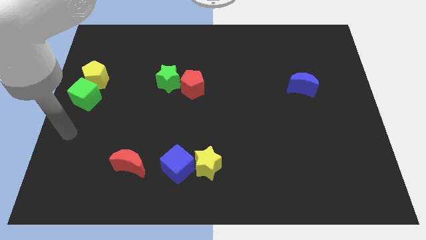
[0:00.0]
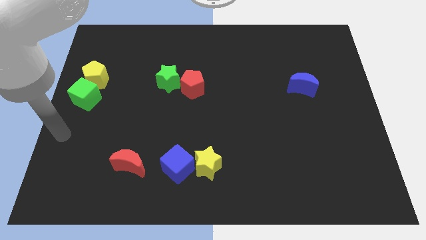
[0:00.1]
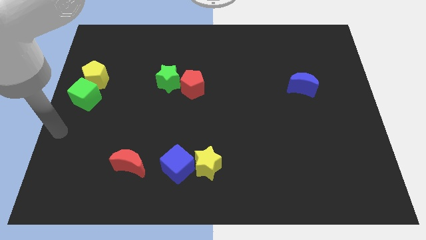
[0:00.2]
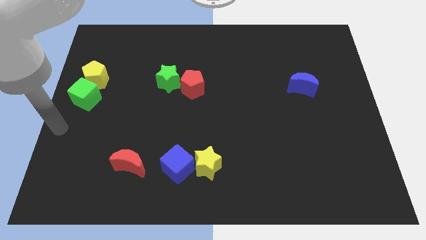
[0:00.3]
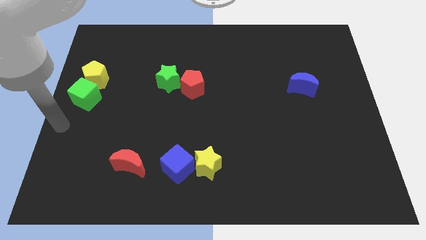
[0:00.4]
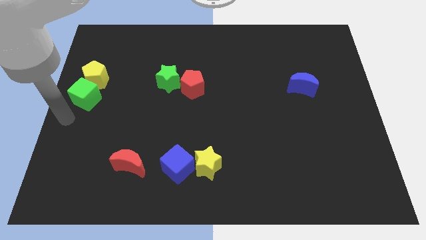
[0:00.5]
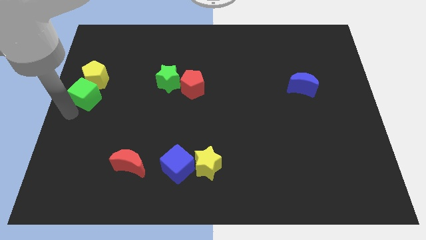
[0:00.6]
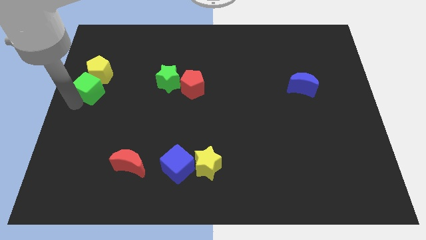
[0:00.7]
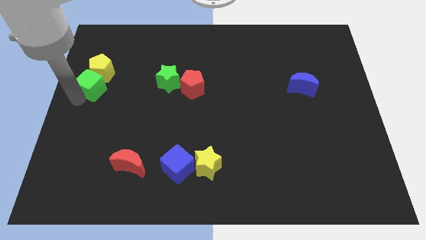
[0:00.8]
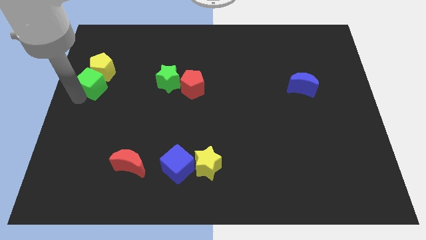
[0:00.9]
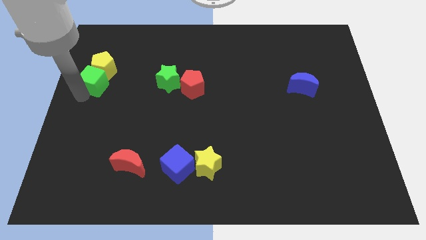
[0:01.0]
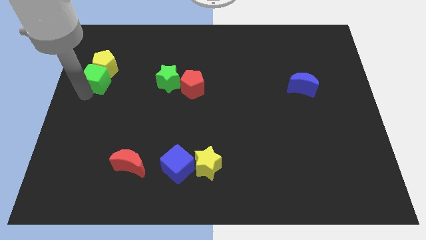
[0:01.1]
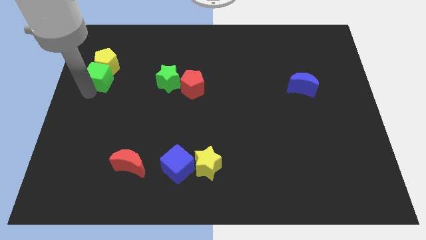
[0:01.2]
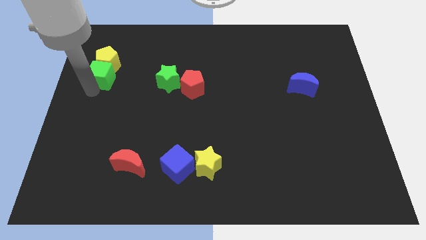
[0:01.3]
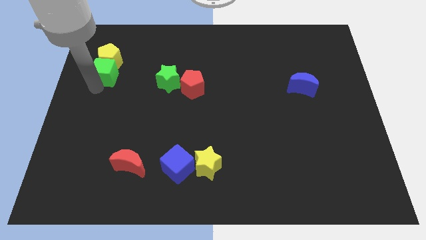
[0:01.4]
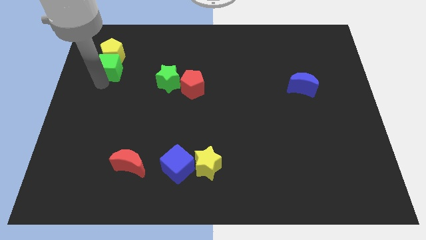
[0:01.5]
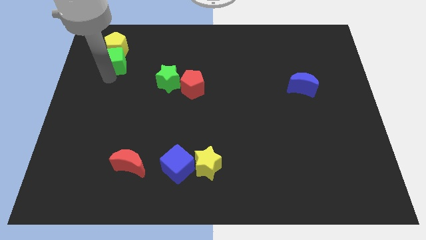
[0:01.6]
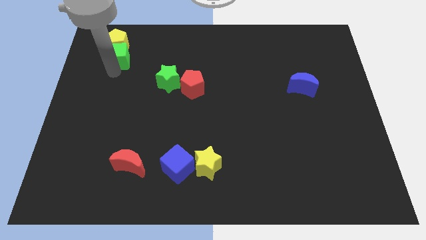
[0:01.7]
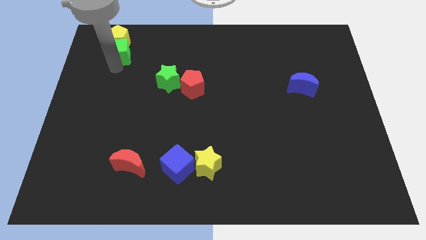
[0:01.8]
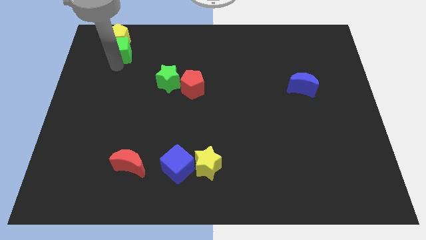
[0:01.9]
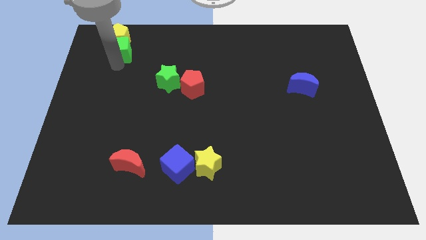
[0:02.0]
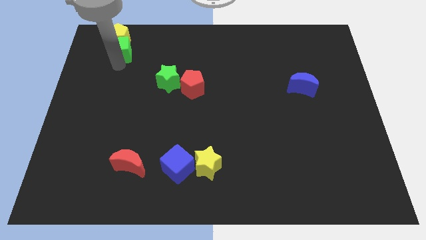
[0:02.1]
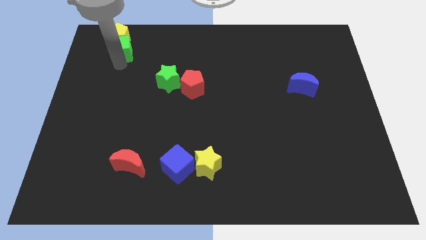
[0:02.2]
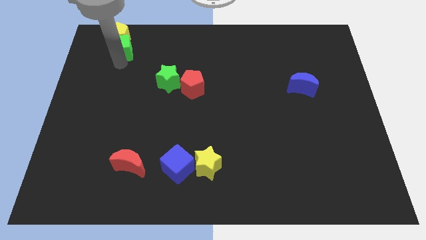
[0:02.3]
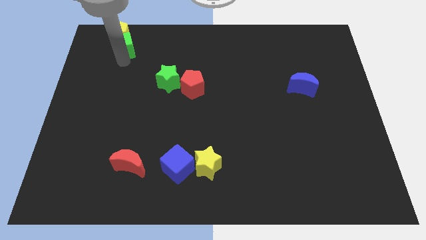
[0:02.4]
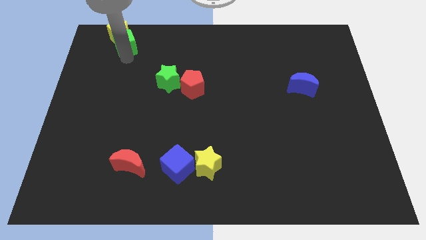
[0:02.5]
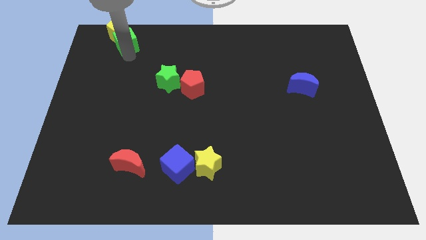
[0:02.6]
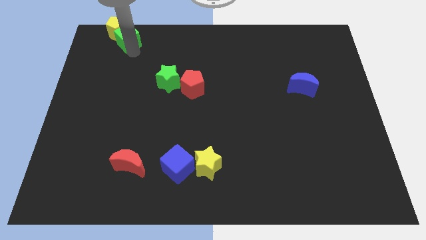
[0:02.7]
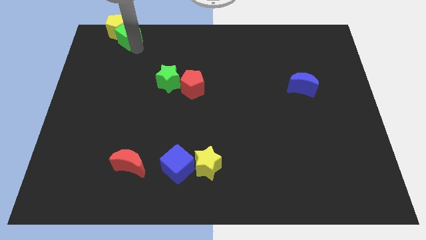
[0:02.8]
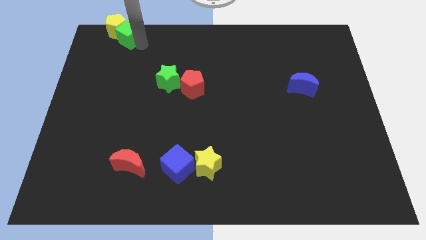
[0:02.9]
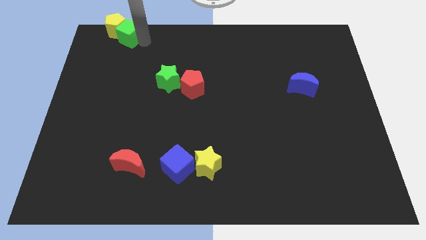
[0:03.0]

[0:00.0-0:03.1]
move the green cube and yellow pentagon to the top left

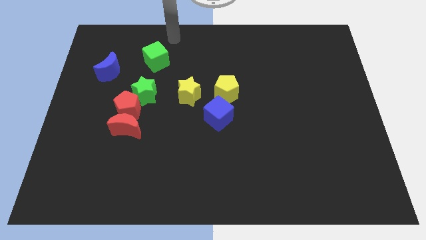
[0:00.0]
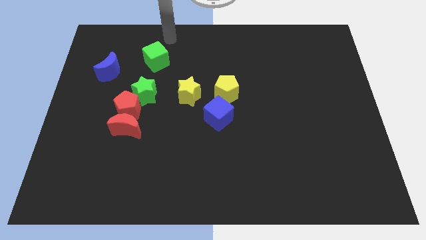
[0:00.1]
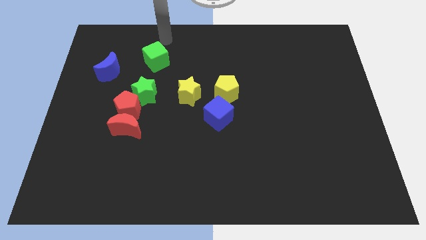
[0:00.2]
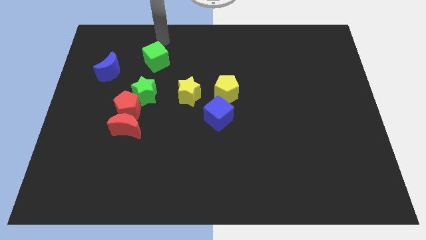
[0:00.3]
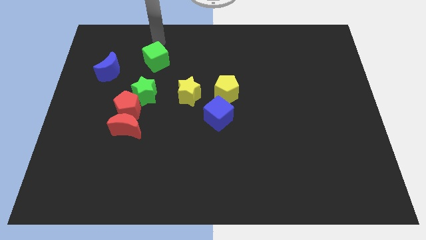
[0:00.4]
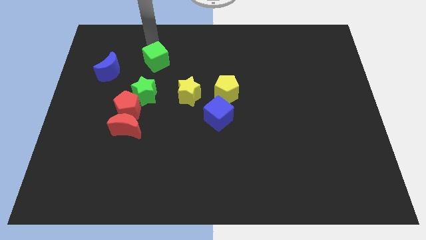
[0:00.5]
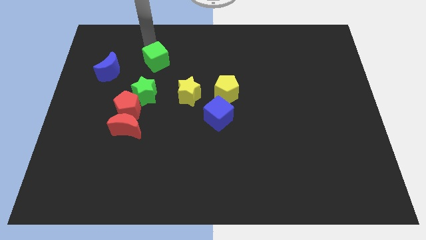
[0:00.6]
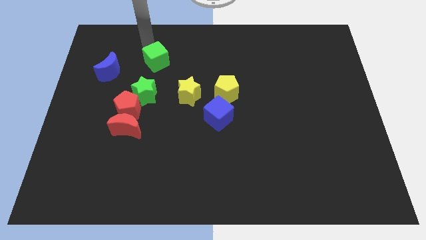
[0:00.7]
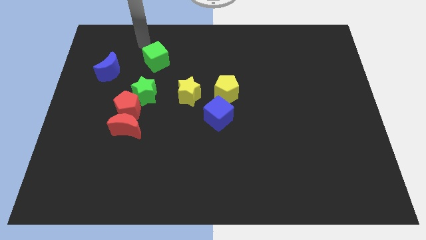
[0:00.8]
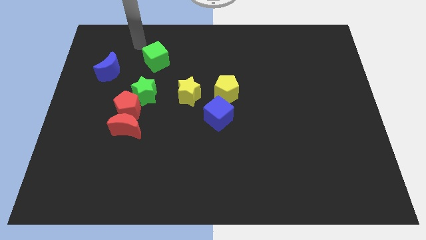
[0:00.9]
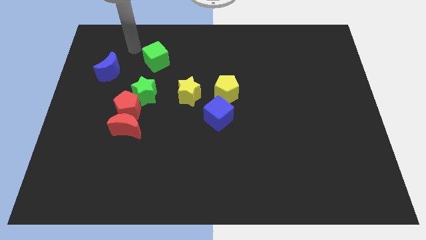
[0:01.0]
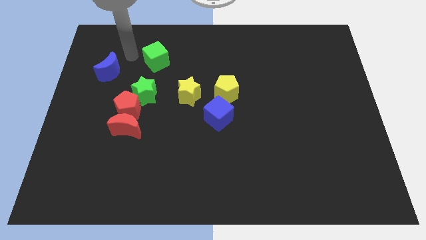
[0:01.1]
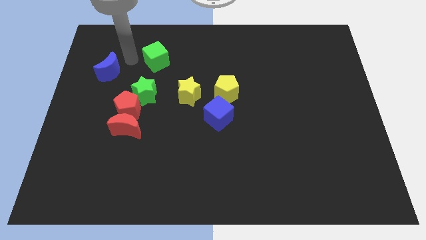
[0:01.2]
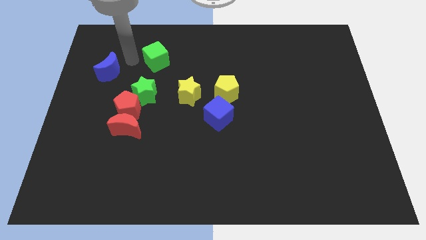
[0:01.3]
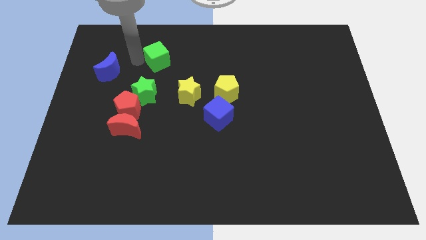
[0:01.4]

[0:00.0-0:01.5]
point the arm to the left of the green cube

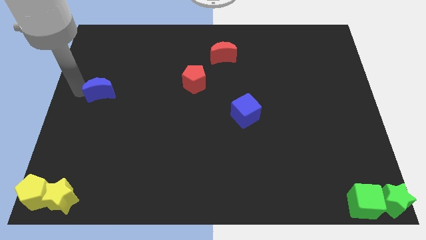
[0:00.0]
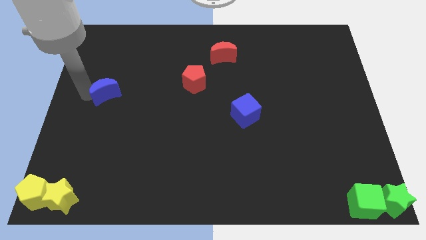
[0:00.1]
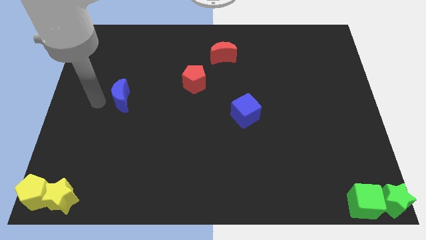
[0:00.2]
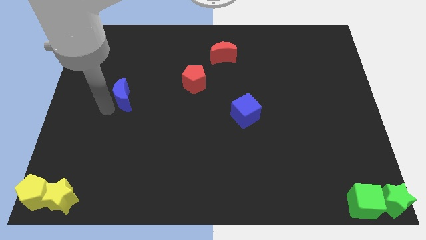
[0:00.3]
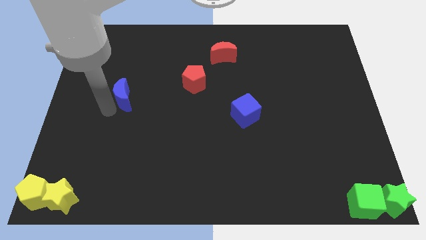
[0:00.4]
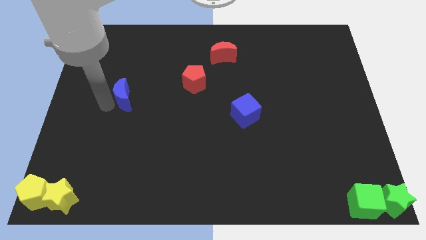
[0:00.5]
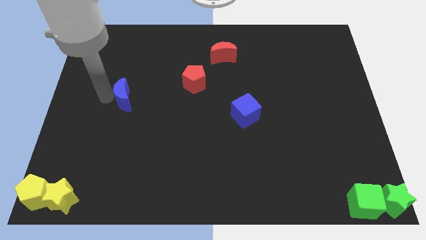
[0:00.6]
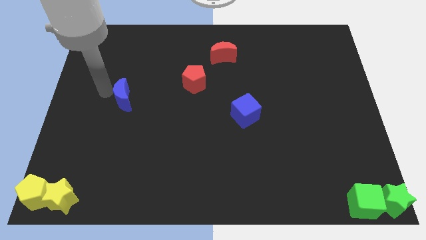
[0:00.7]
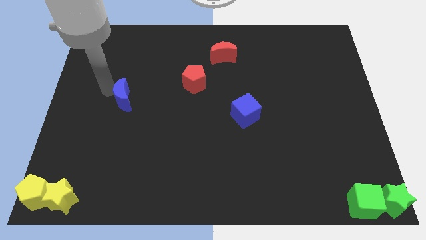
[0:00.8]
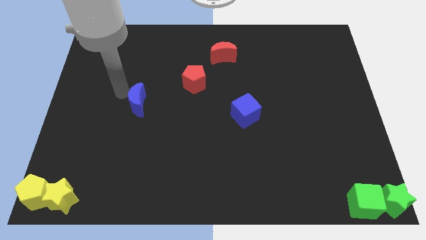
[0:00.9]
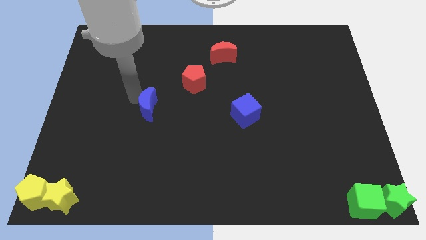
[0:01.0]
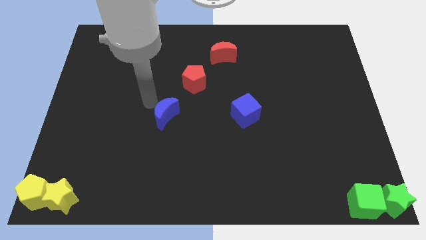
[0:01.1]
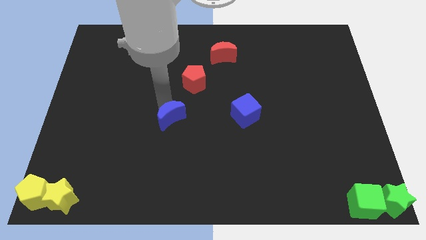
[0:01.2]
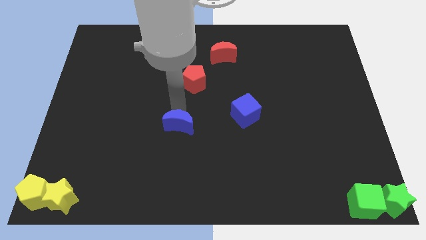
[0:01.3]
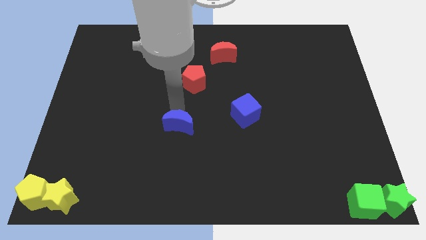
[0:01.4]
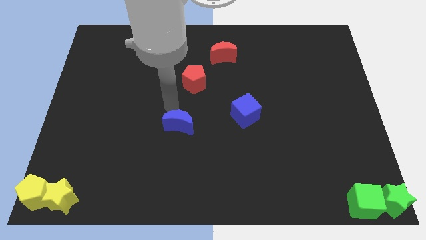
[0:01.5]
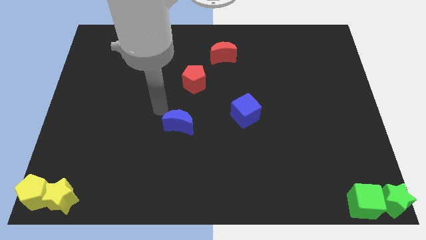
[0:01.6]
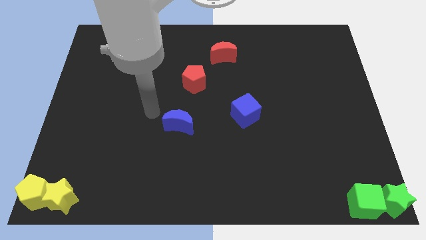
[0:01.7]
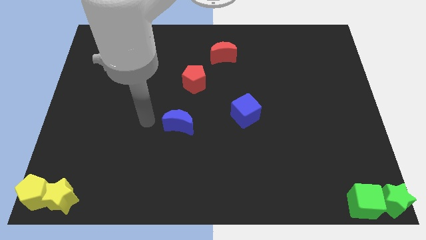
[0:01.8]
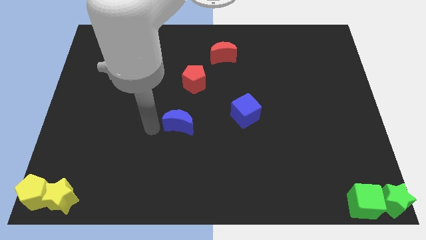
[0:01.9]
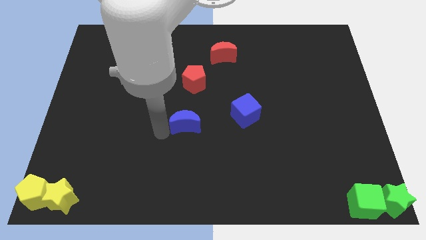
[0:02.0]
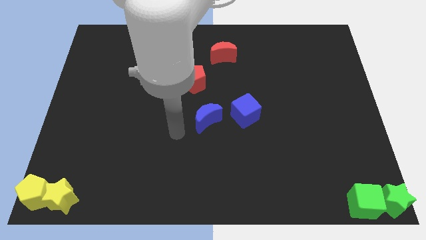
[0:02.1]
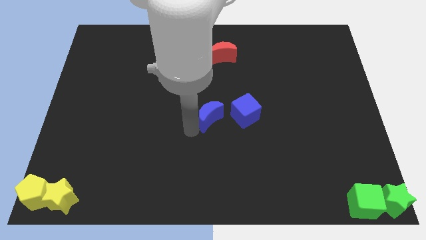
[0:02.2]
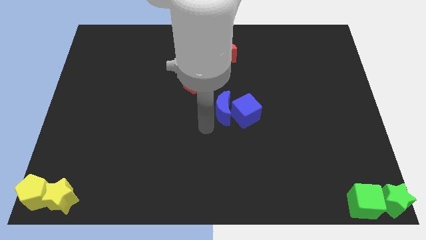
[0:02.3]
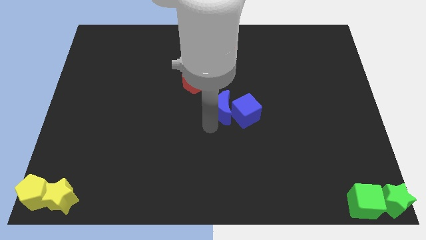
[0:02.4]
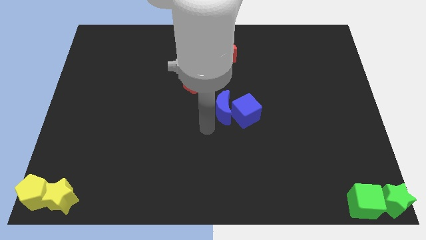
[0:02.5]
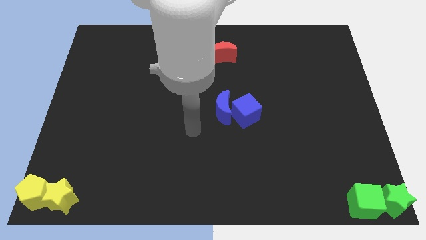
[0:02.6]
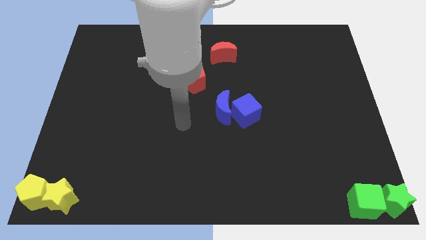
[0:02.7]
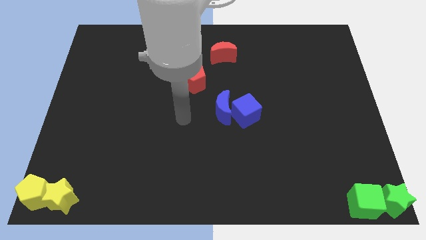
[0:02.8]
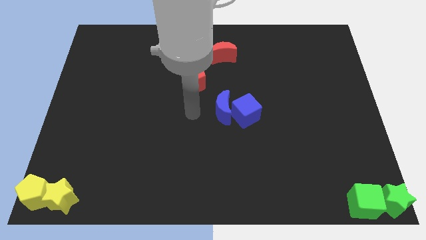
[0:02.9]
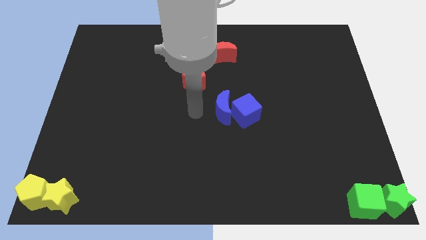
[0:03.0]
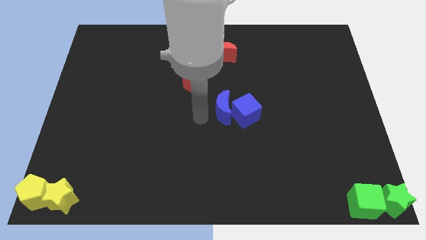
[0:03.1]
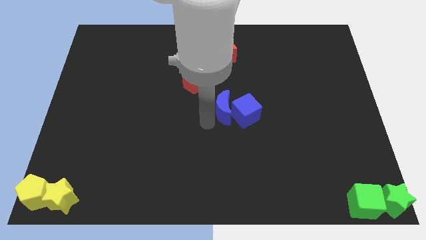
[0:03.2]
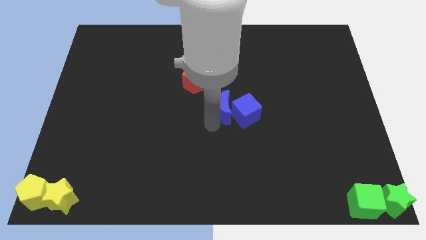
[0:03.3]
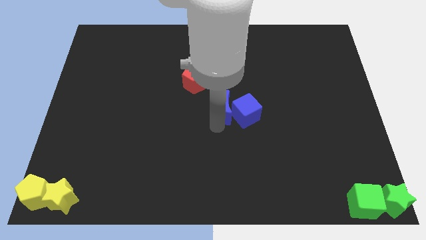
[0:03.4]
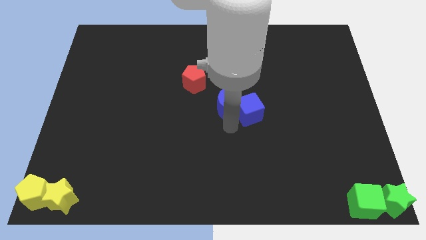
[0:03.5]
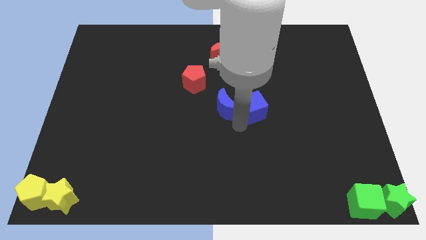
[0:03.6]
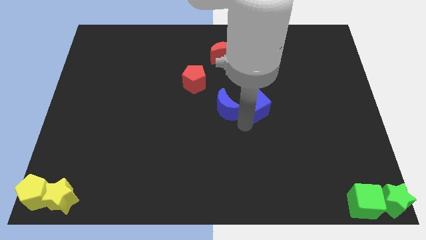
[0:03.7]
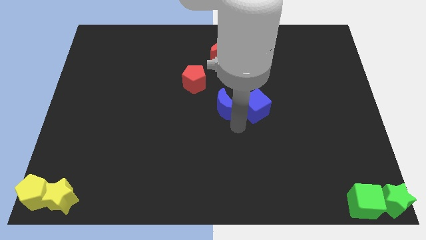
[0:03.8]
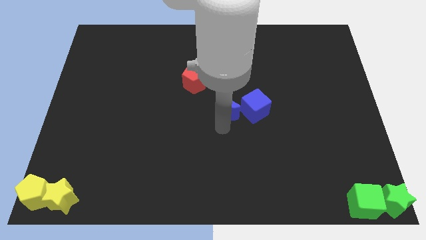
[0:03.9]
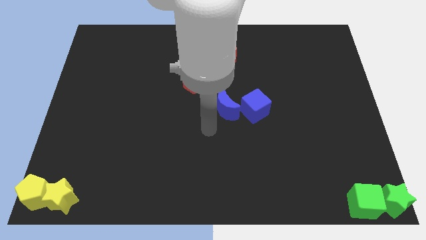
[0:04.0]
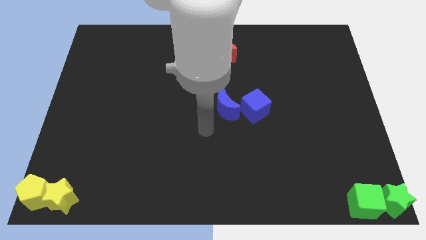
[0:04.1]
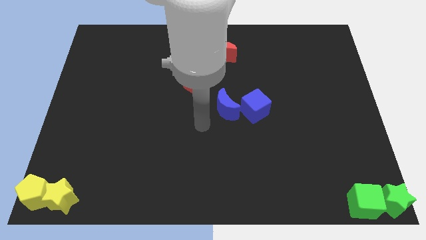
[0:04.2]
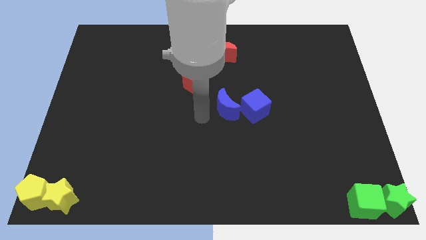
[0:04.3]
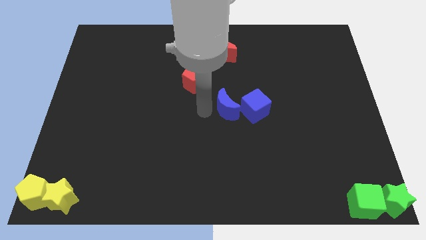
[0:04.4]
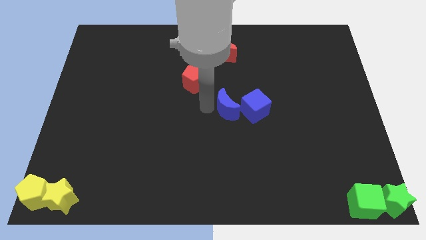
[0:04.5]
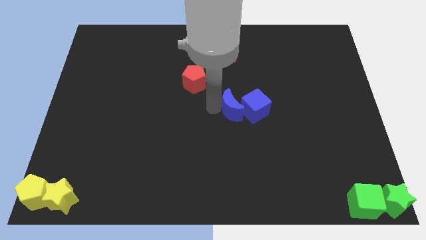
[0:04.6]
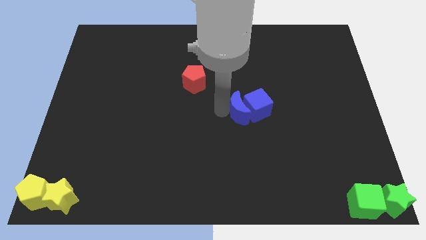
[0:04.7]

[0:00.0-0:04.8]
push the blue crescent left to the blue cube
